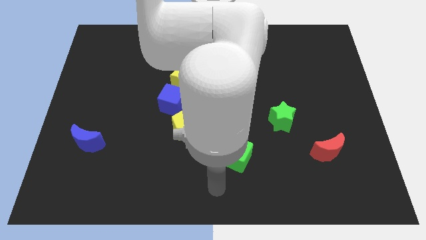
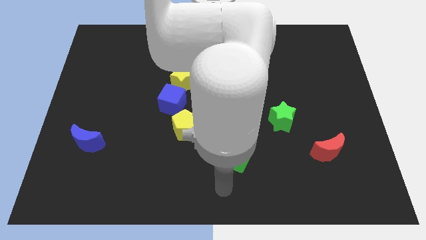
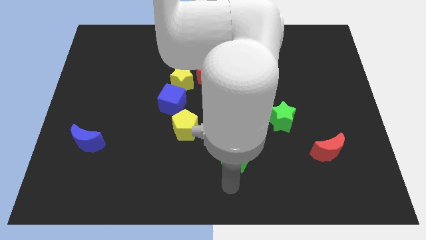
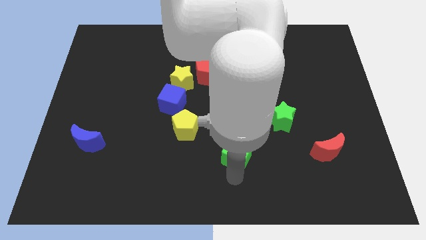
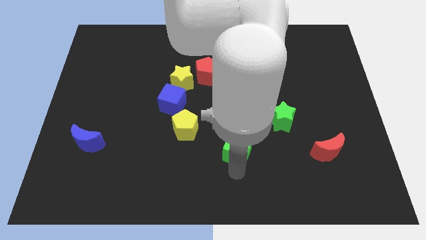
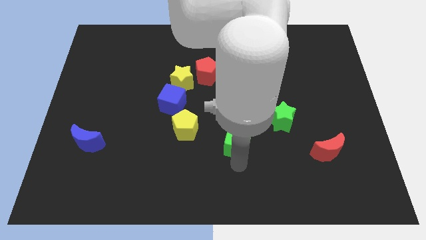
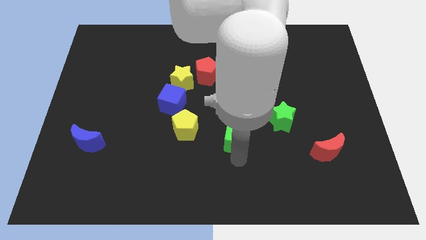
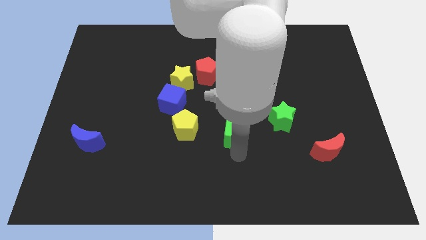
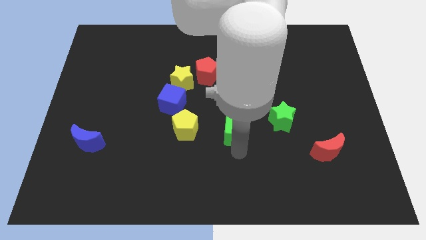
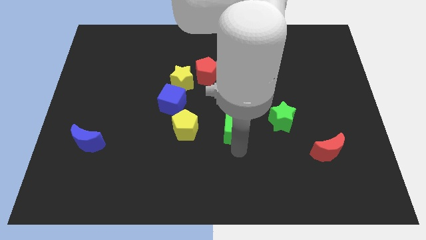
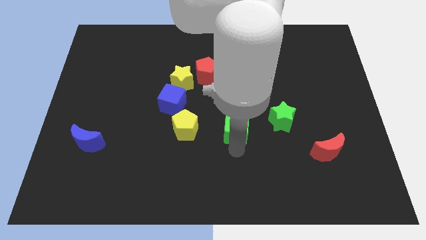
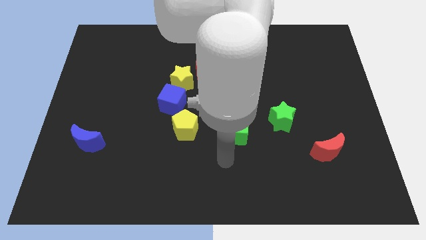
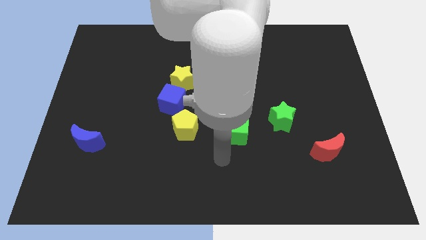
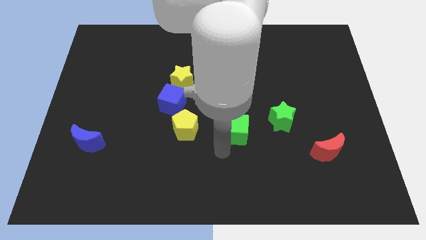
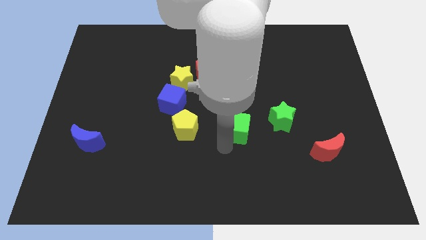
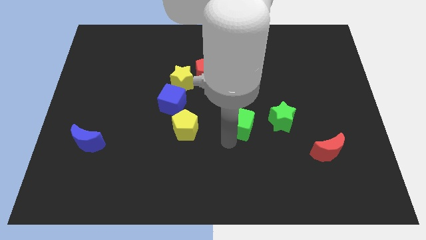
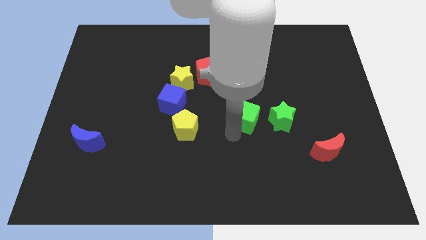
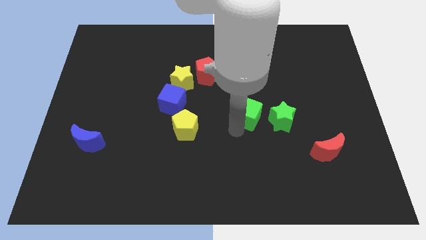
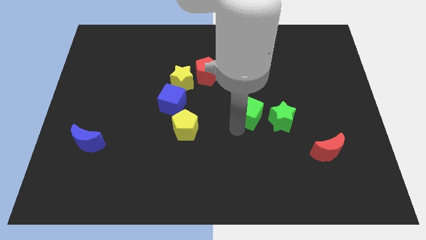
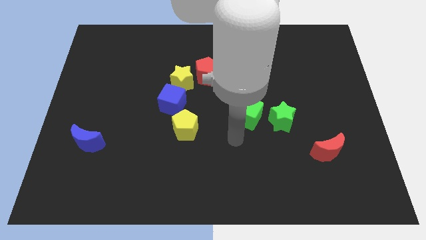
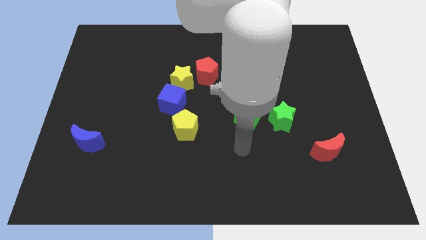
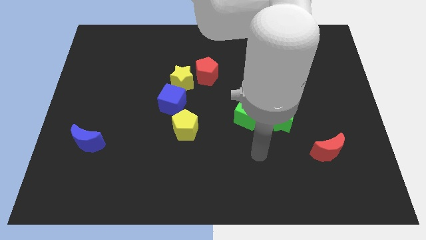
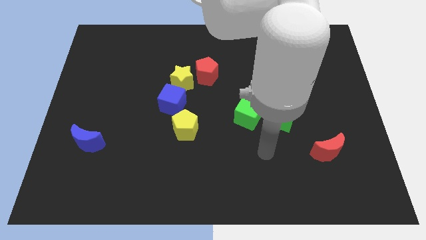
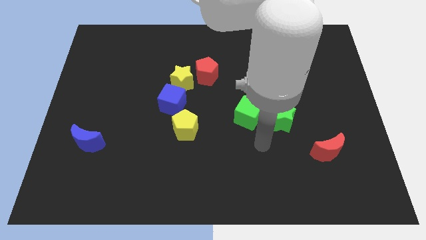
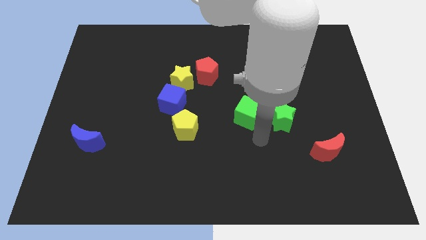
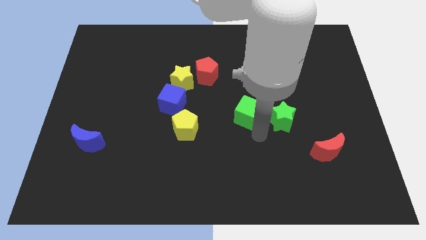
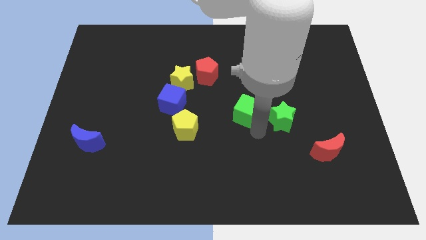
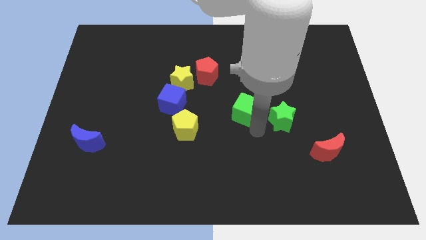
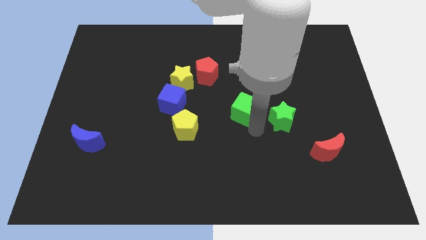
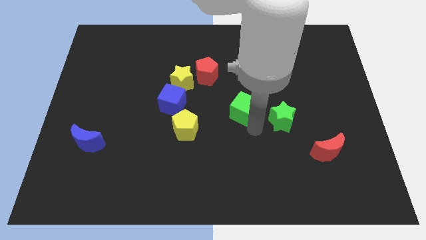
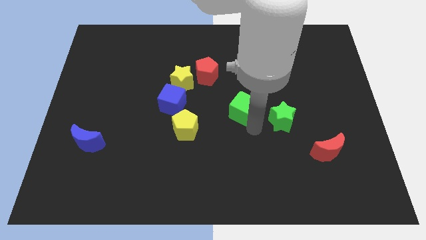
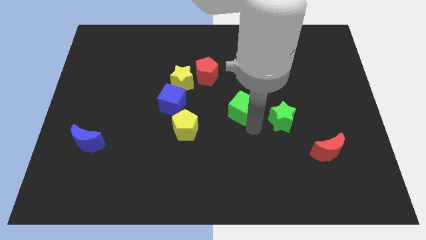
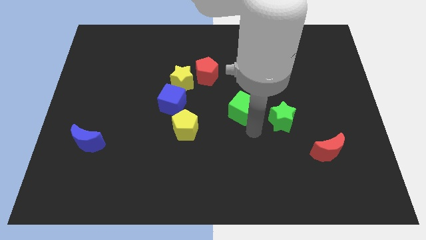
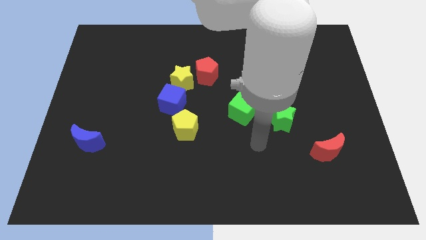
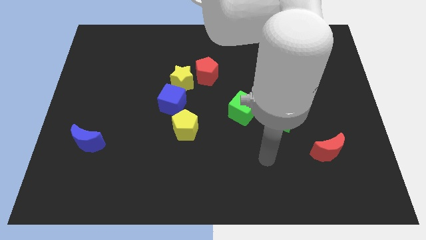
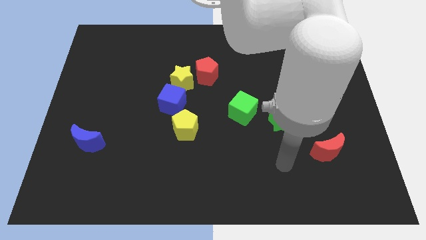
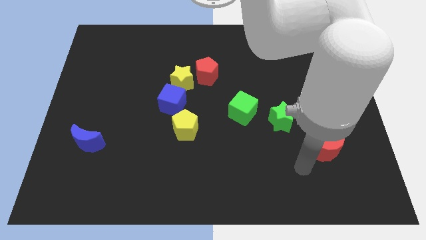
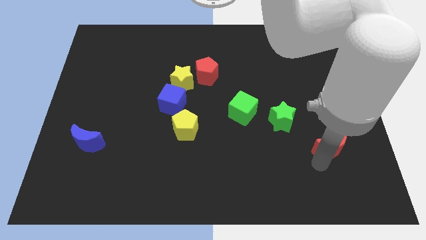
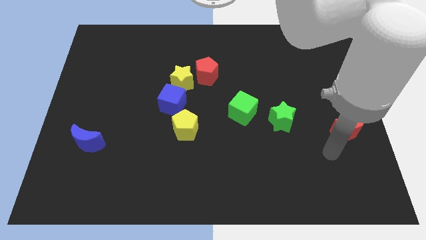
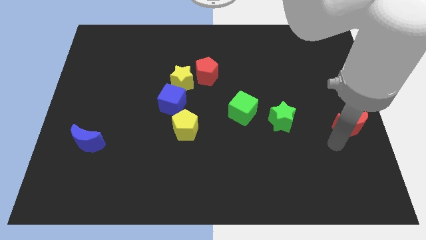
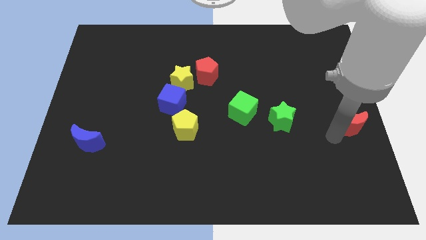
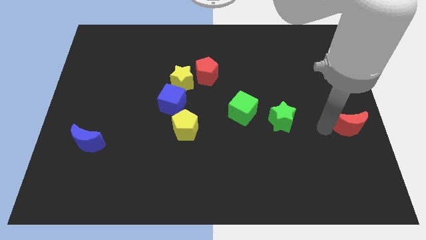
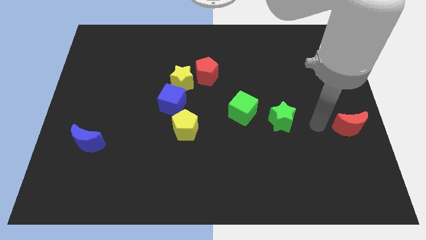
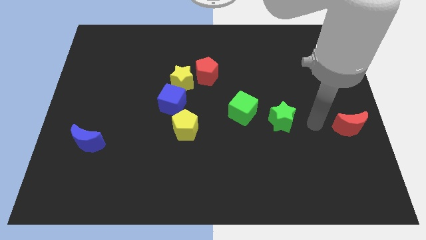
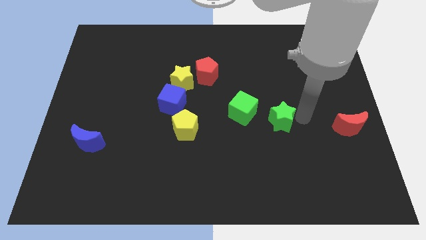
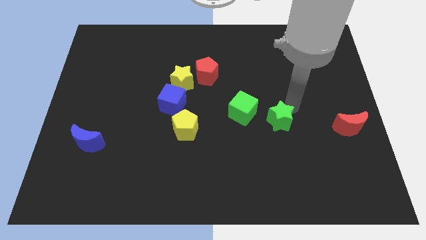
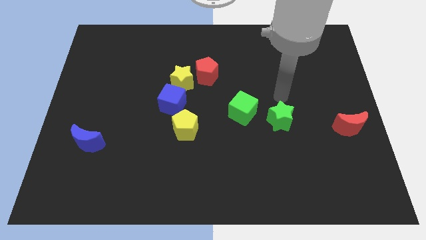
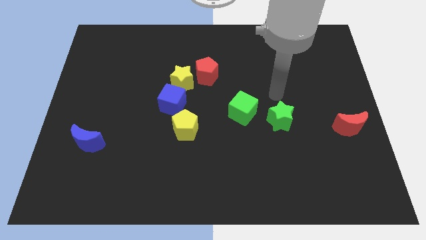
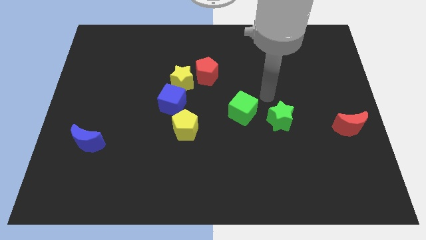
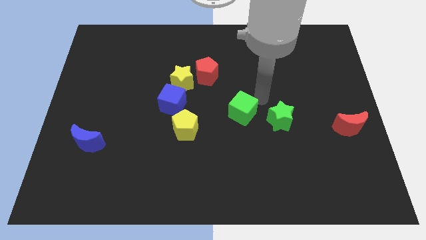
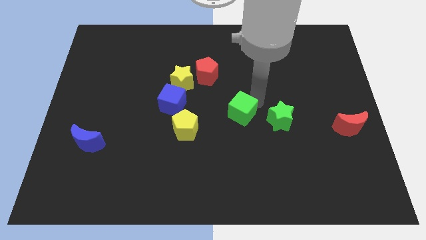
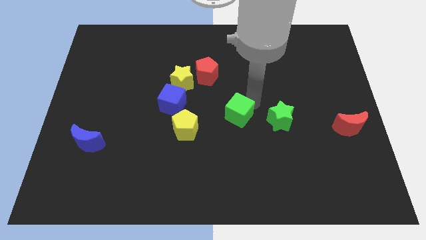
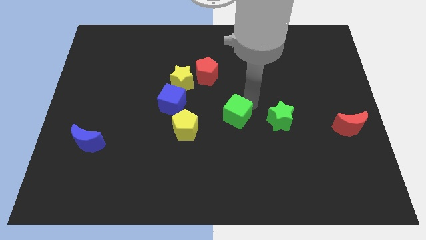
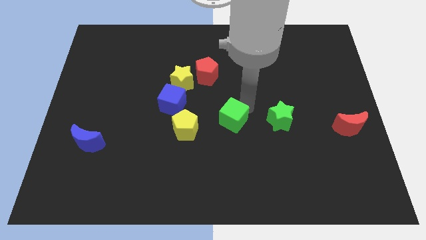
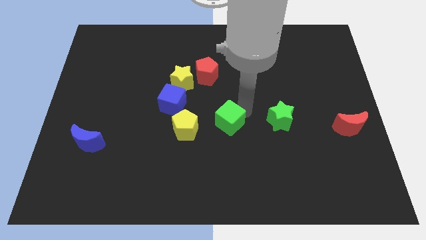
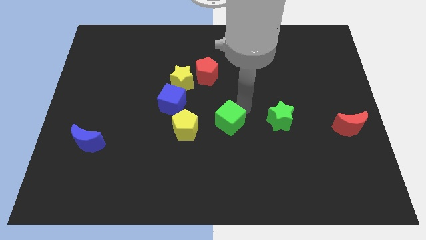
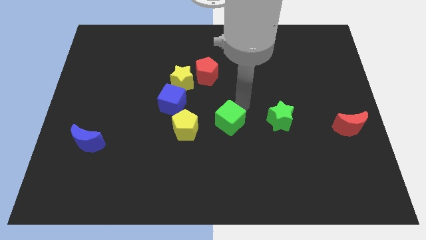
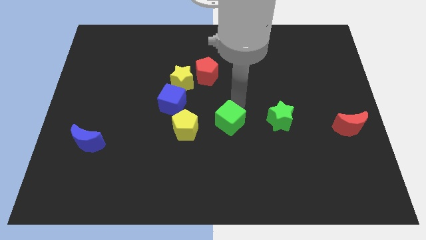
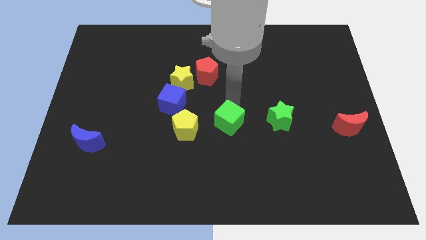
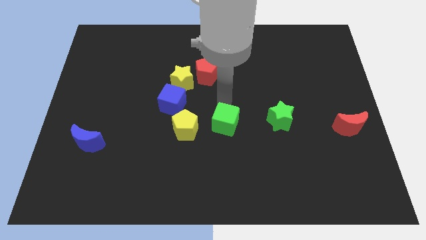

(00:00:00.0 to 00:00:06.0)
push the green cube slightly upwards

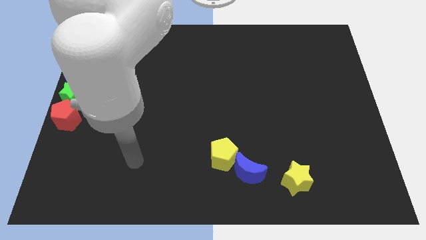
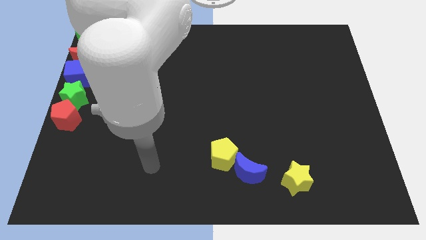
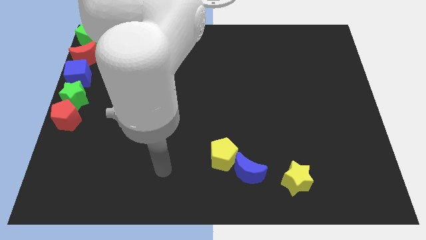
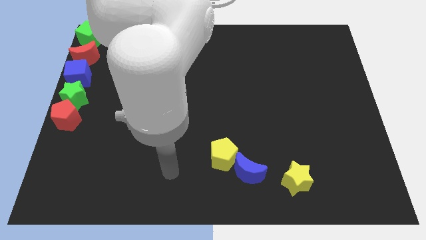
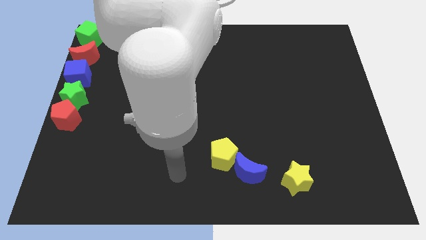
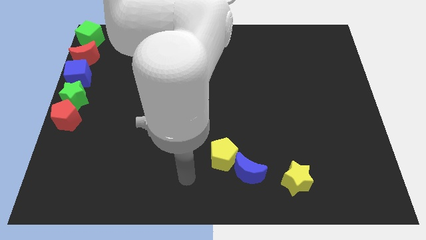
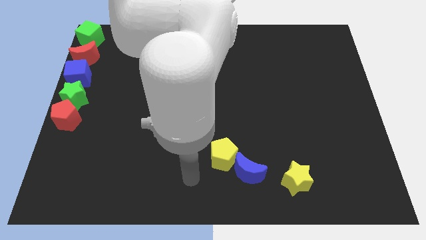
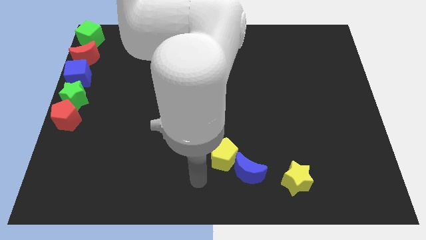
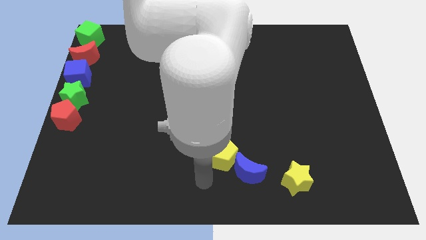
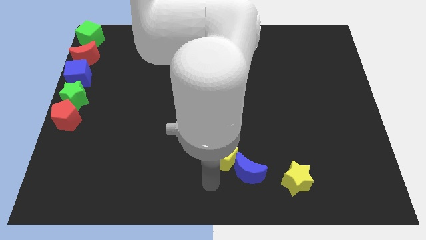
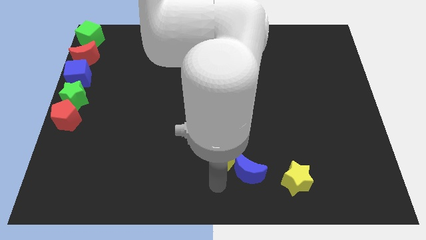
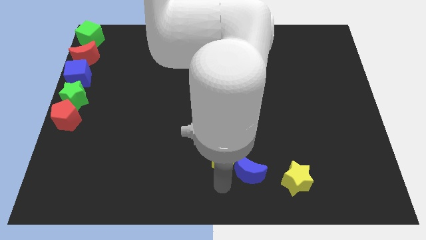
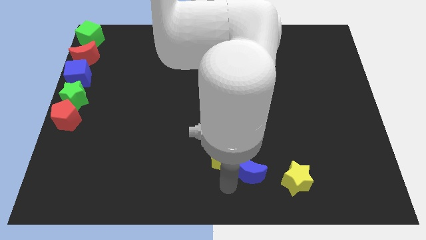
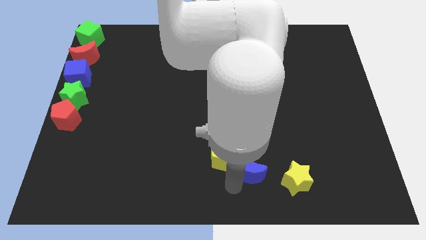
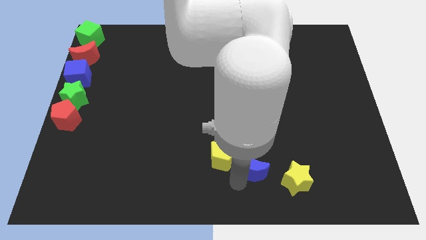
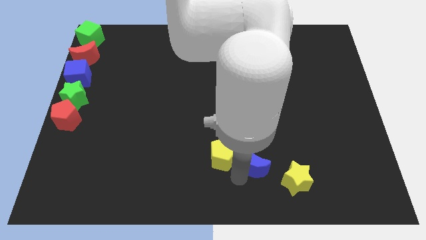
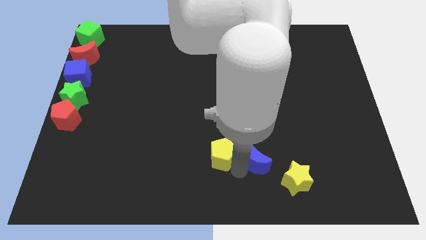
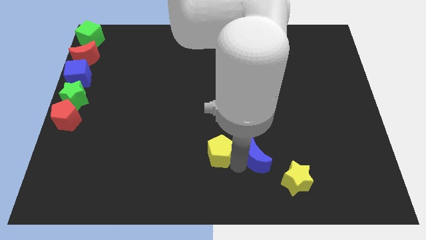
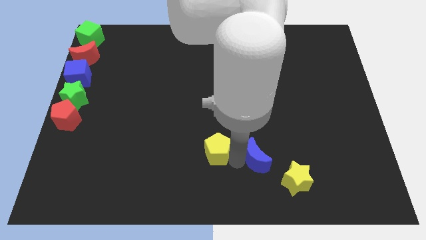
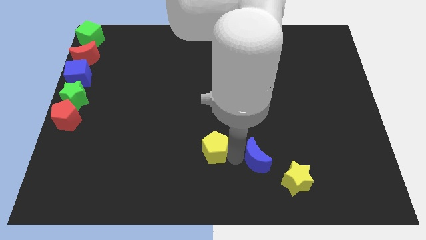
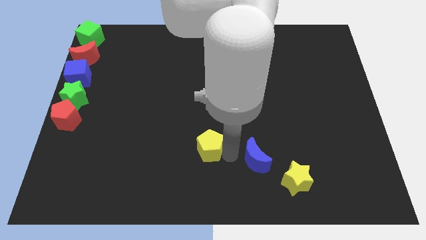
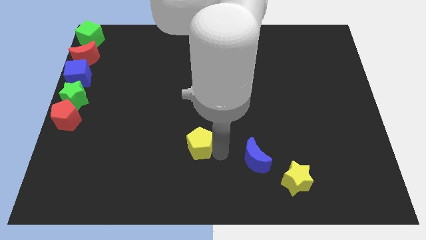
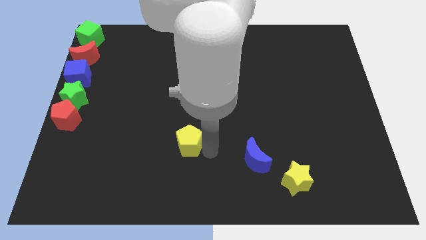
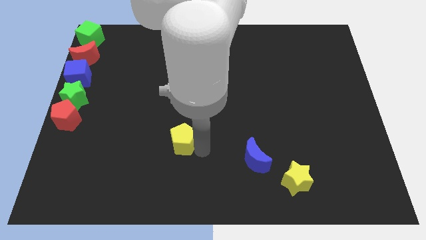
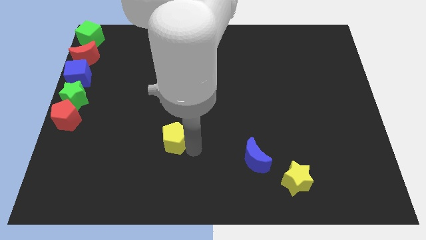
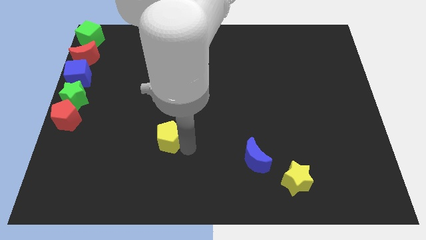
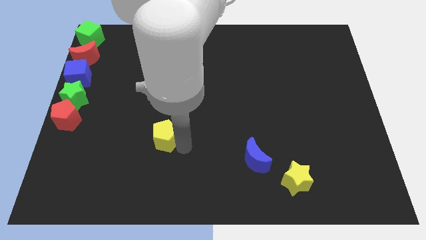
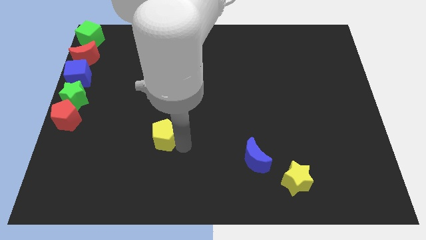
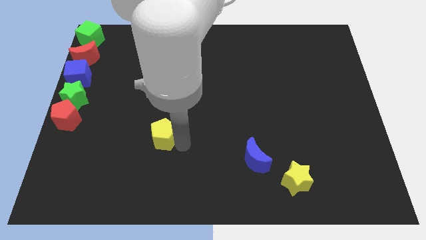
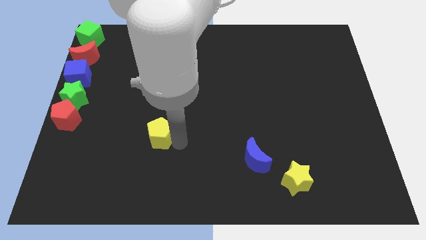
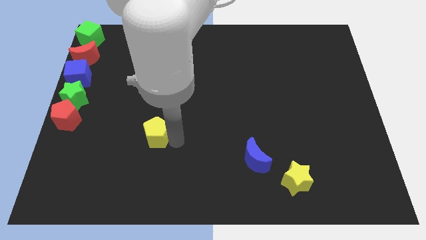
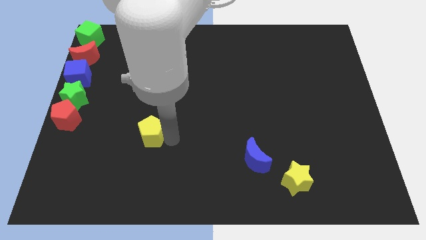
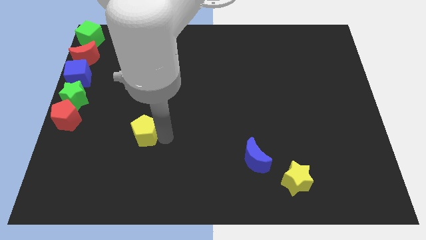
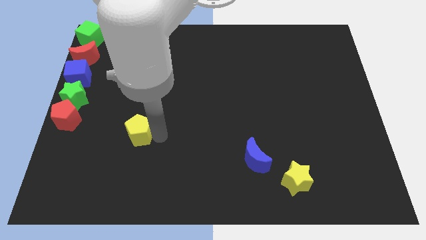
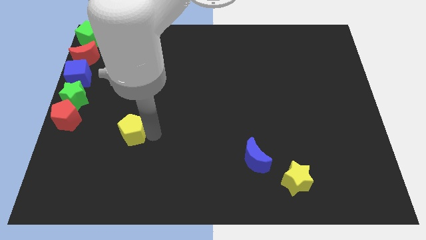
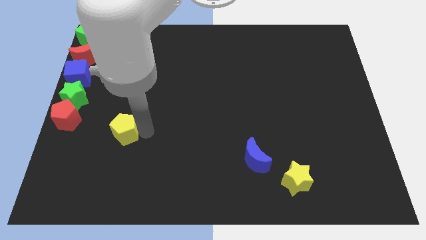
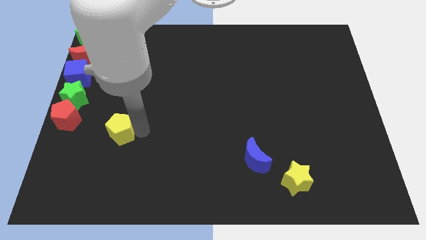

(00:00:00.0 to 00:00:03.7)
move the yellow pentagon to the bottom right side of the red pentagon
